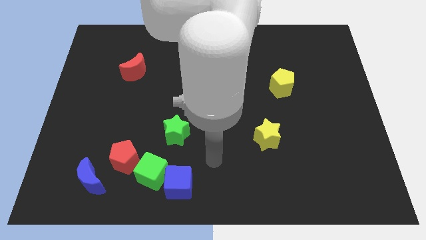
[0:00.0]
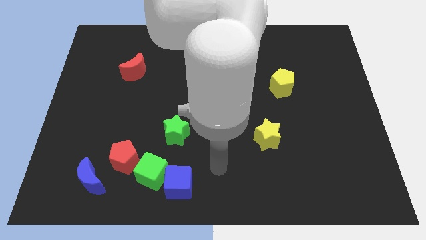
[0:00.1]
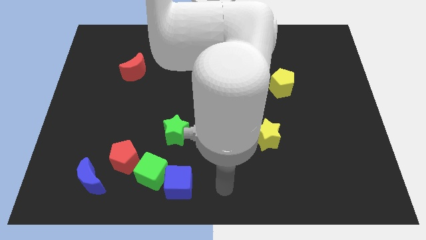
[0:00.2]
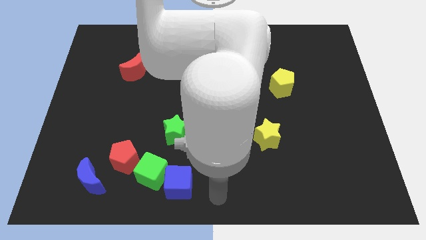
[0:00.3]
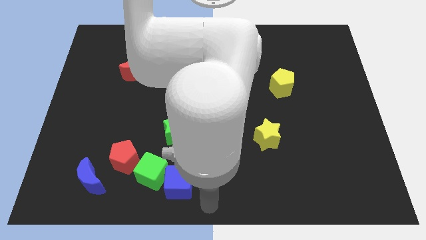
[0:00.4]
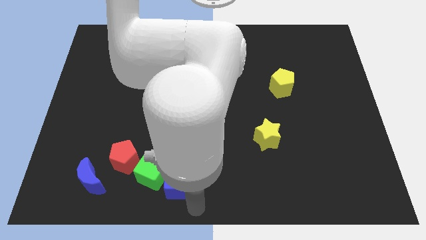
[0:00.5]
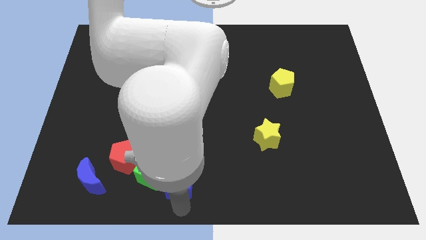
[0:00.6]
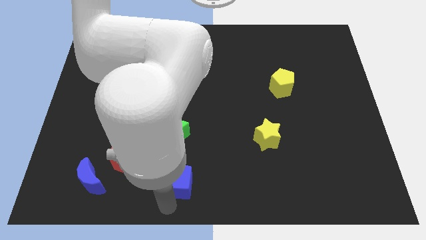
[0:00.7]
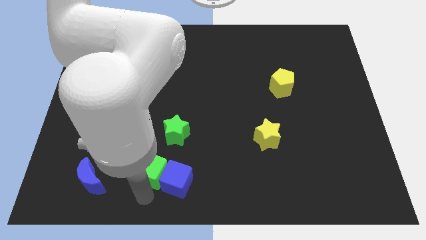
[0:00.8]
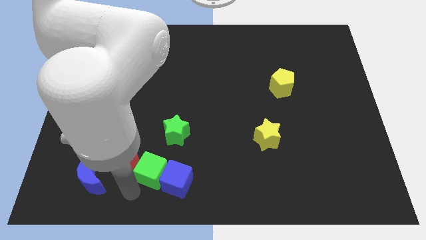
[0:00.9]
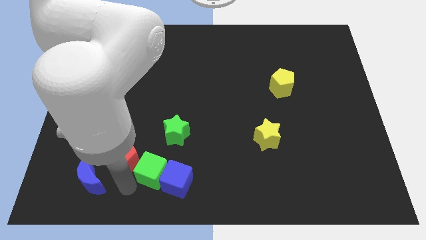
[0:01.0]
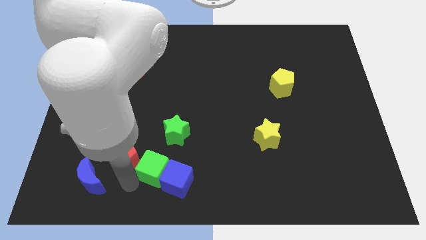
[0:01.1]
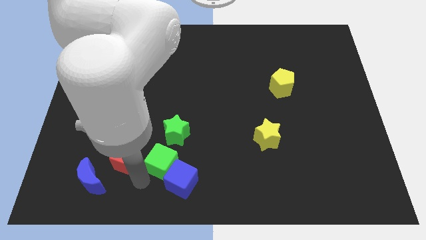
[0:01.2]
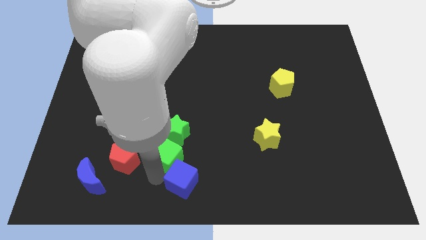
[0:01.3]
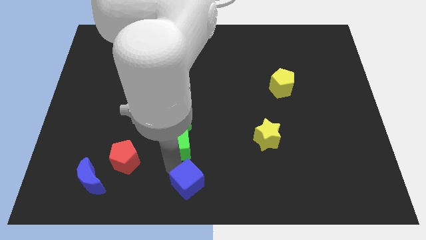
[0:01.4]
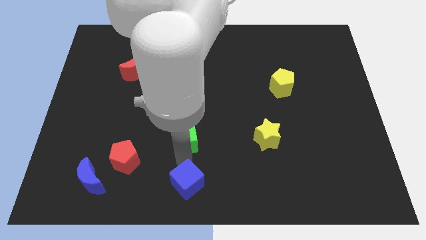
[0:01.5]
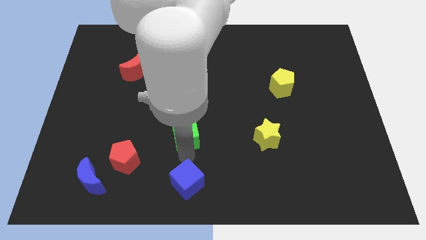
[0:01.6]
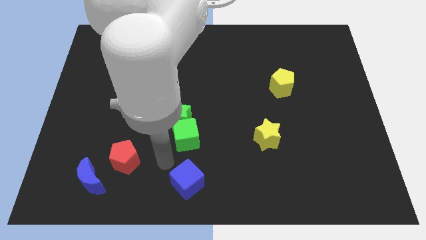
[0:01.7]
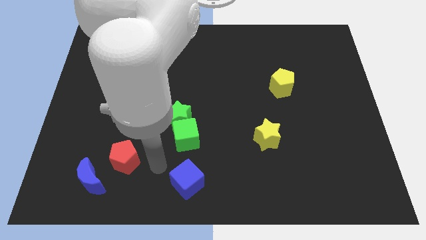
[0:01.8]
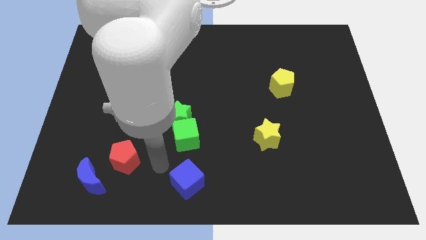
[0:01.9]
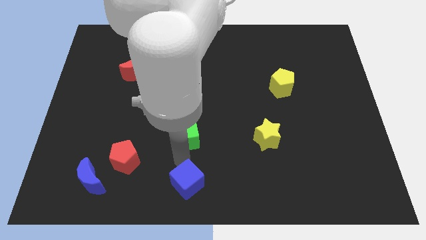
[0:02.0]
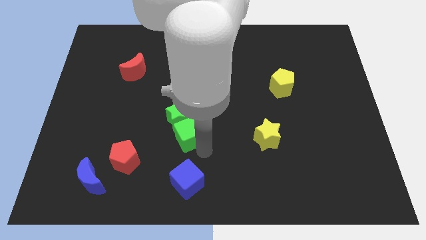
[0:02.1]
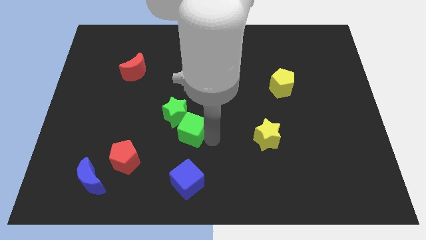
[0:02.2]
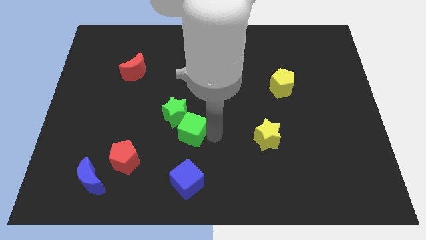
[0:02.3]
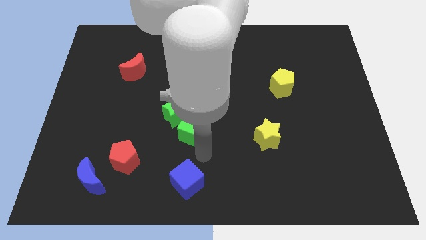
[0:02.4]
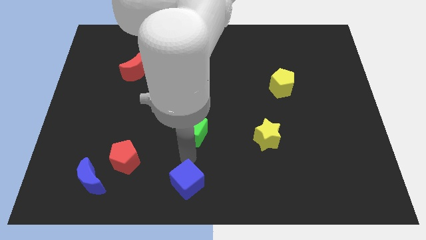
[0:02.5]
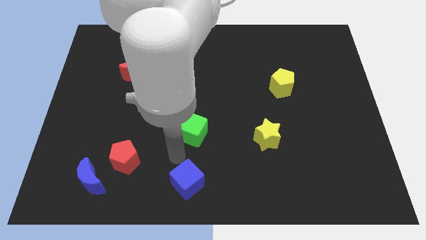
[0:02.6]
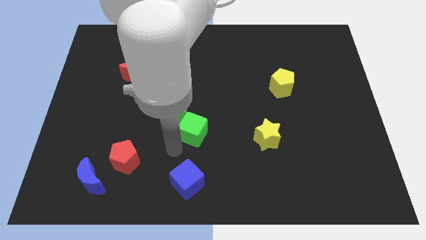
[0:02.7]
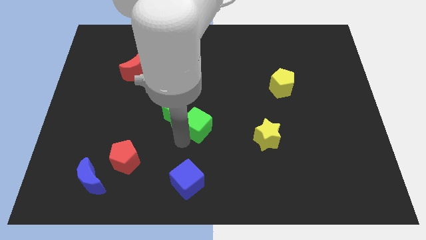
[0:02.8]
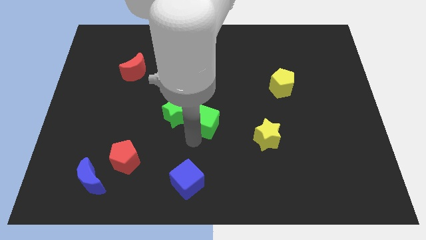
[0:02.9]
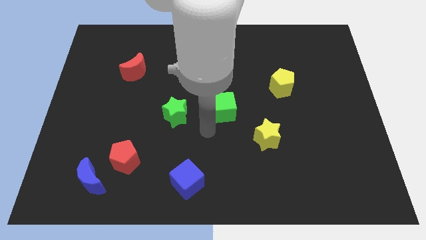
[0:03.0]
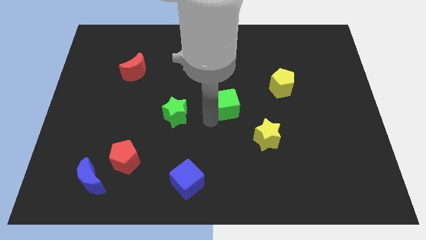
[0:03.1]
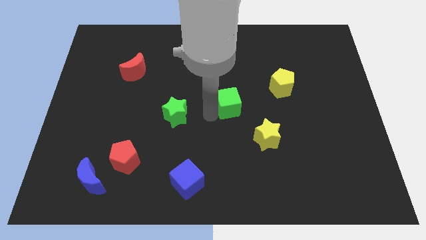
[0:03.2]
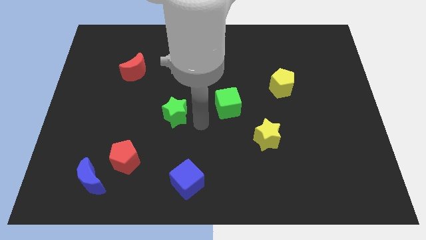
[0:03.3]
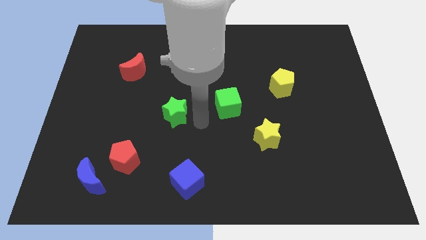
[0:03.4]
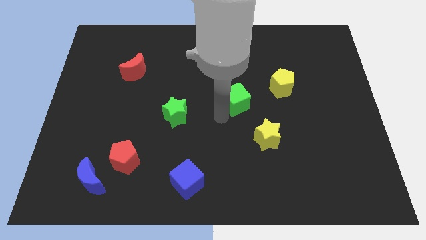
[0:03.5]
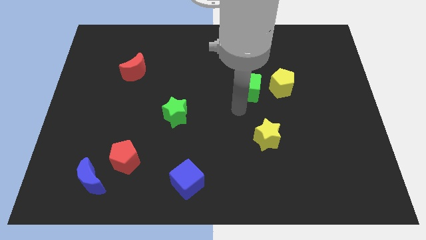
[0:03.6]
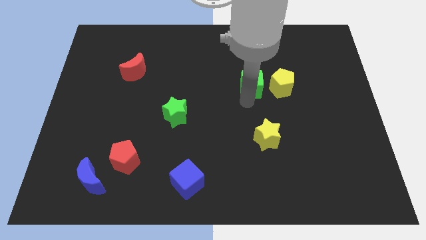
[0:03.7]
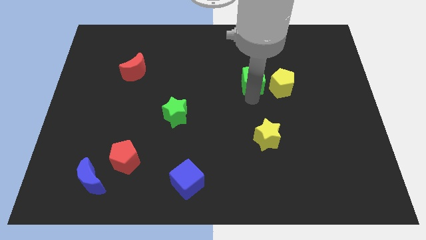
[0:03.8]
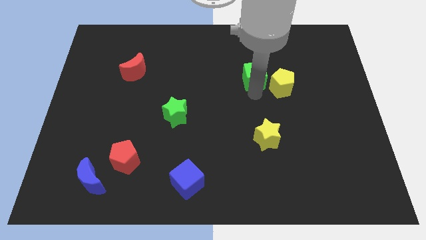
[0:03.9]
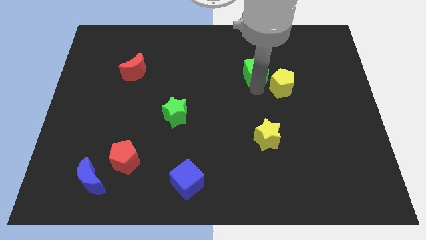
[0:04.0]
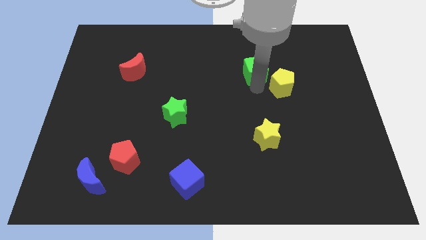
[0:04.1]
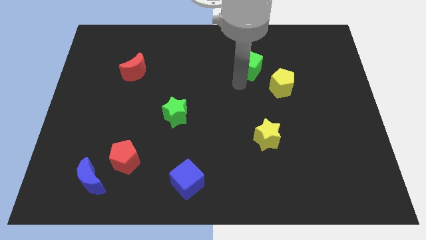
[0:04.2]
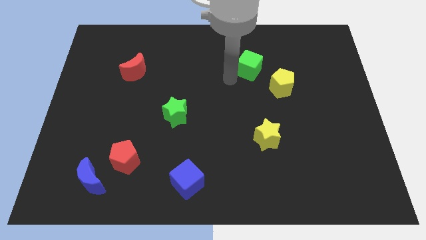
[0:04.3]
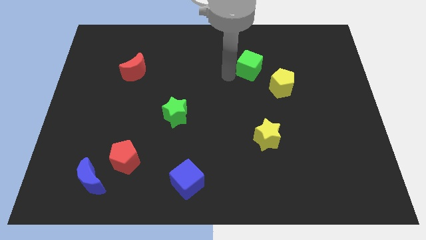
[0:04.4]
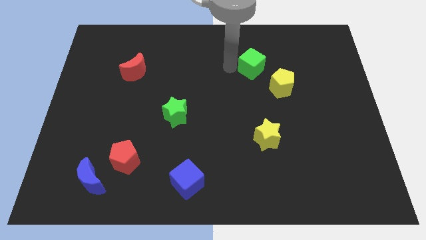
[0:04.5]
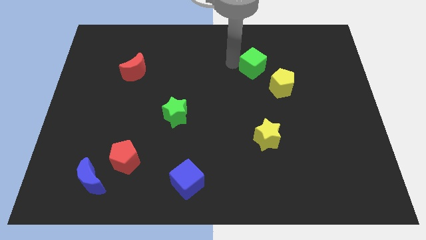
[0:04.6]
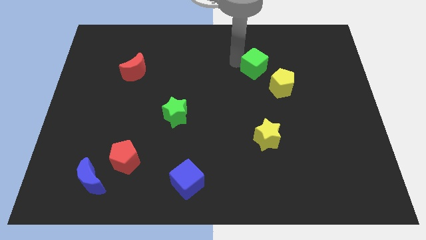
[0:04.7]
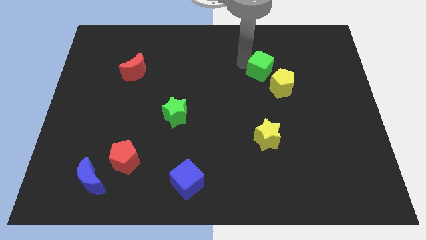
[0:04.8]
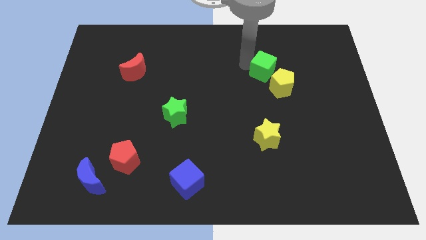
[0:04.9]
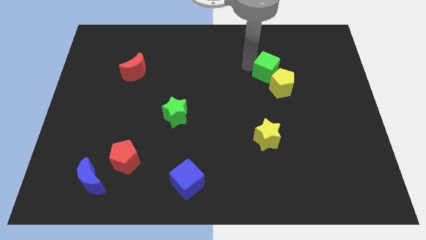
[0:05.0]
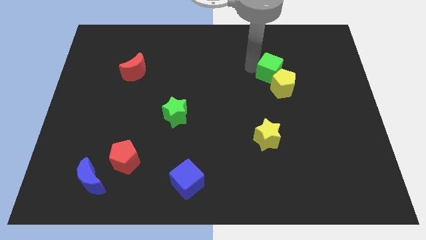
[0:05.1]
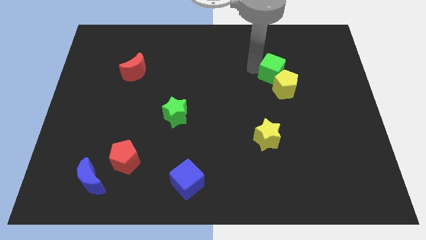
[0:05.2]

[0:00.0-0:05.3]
move the green cube close to the yellow pentagon

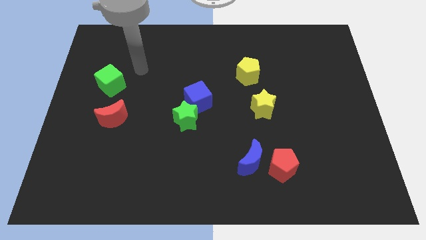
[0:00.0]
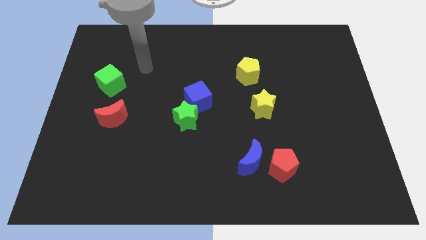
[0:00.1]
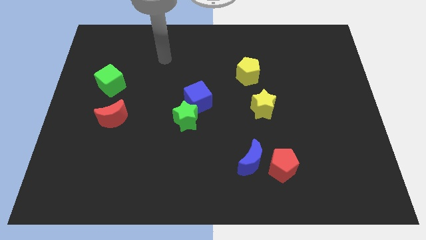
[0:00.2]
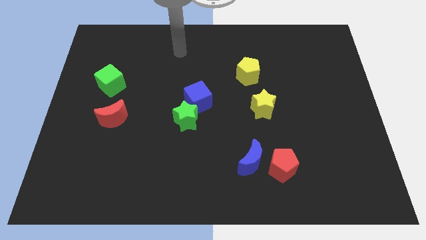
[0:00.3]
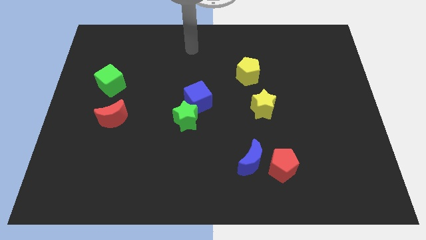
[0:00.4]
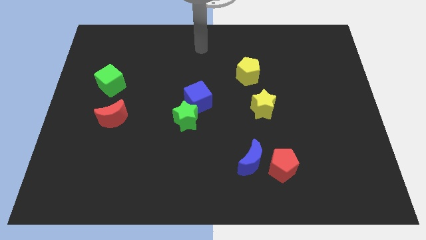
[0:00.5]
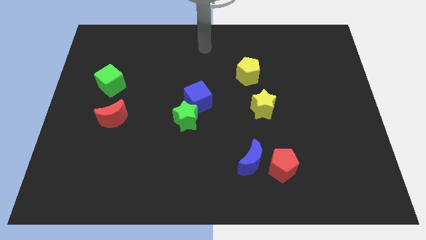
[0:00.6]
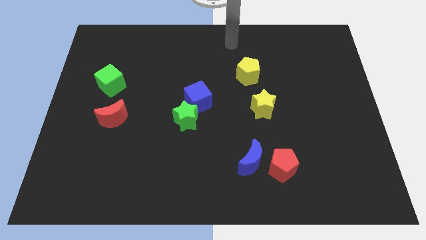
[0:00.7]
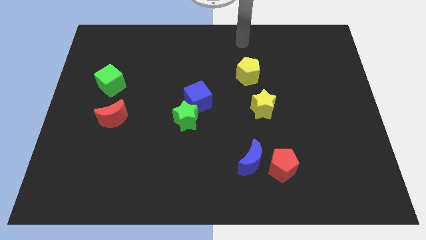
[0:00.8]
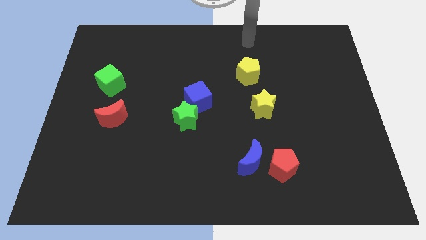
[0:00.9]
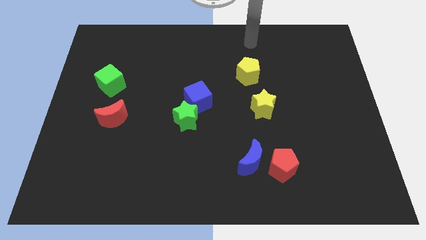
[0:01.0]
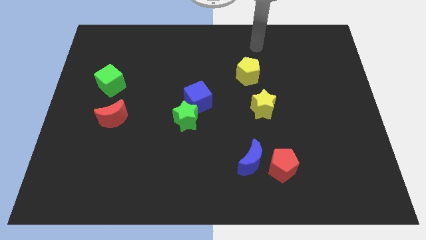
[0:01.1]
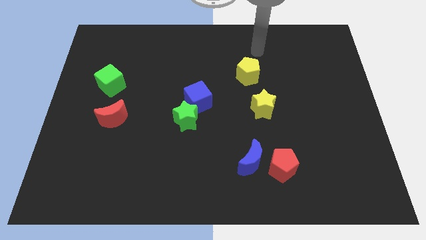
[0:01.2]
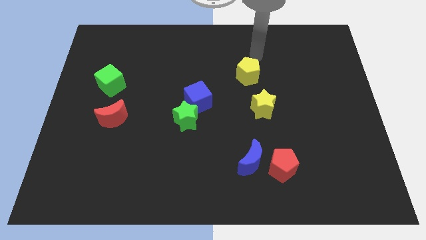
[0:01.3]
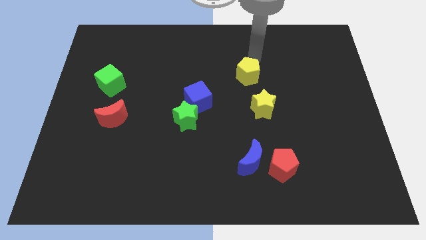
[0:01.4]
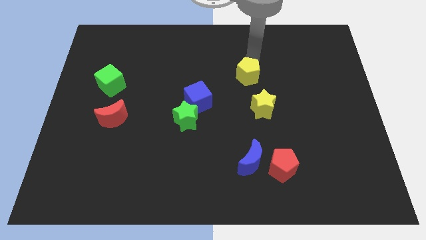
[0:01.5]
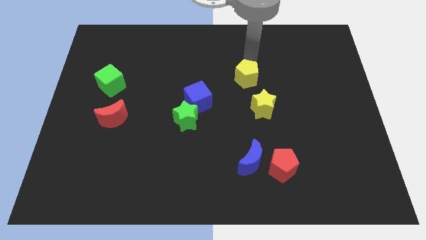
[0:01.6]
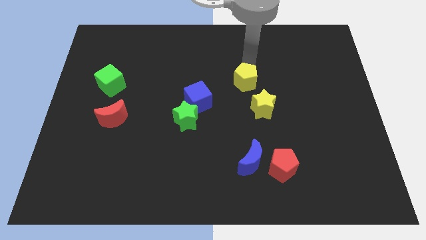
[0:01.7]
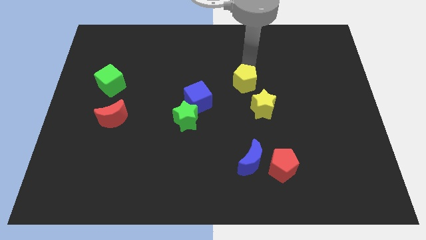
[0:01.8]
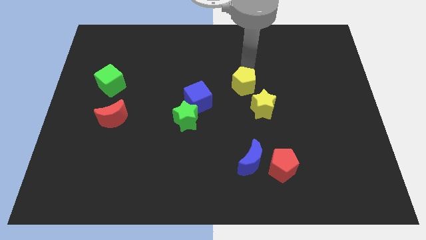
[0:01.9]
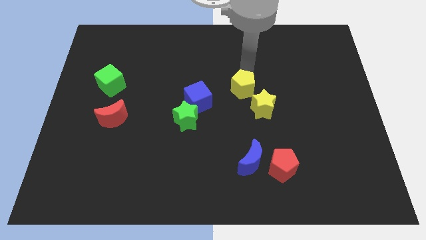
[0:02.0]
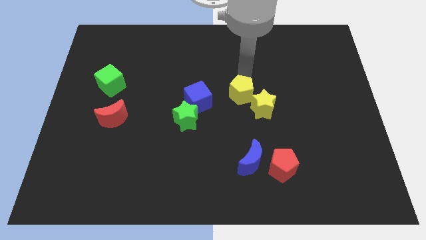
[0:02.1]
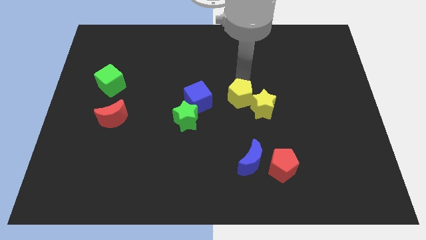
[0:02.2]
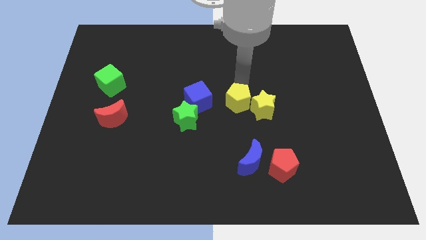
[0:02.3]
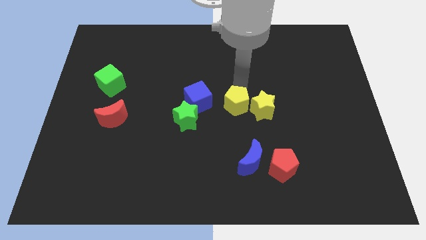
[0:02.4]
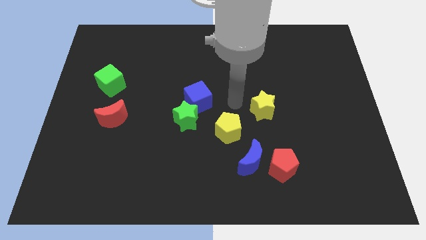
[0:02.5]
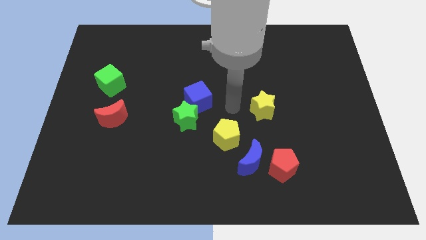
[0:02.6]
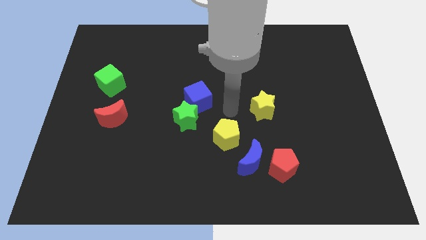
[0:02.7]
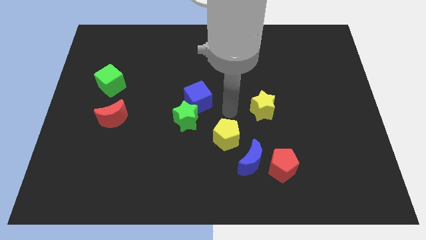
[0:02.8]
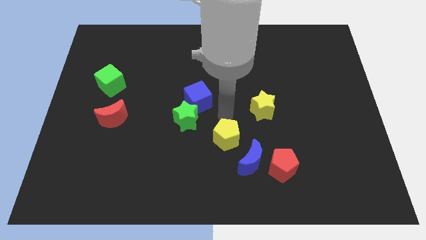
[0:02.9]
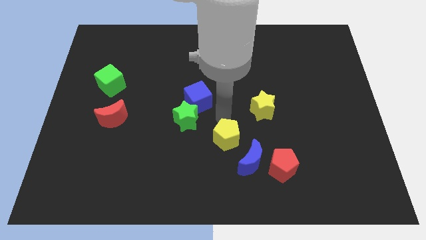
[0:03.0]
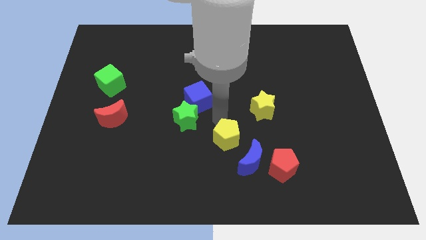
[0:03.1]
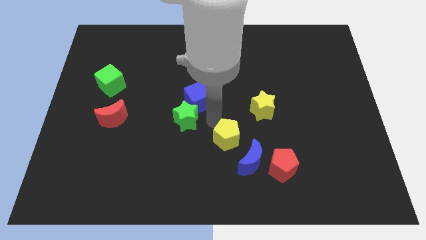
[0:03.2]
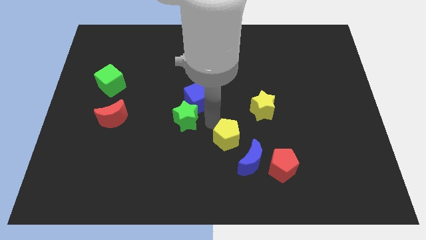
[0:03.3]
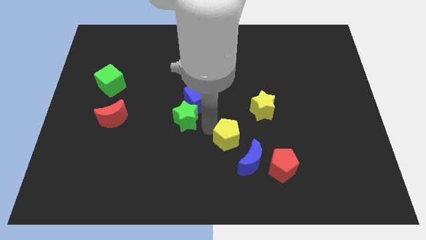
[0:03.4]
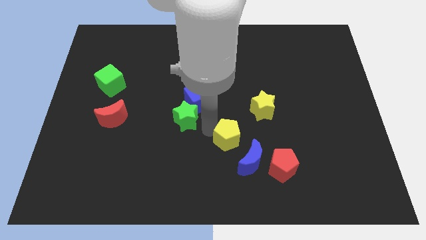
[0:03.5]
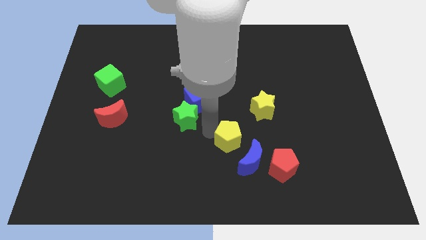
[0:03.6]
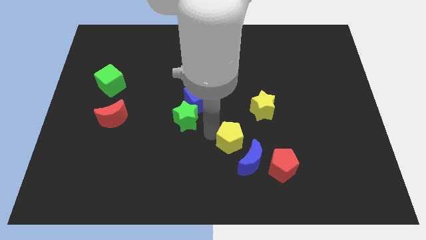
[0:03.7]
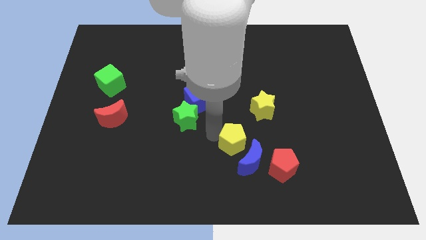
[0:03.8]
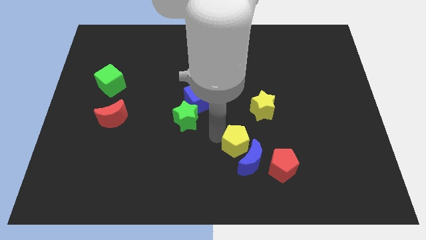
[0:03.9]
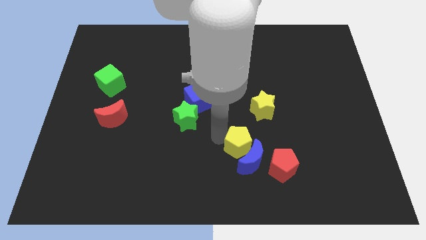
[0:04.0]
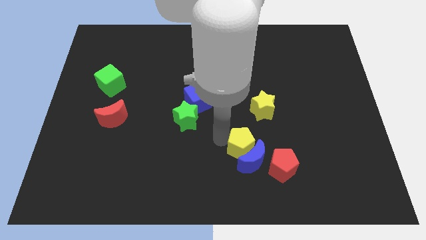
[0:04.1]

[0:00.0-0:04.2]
push the yellow pentagon to the blue moon
